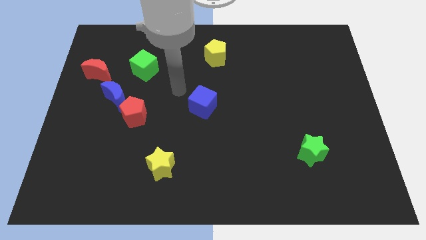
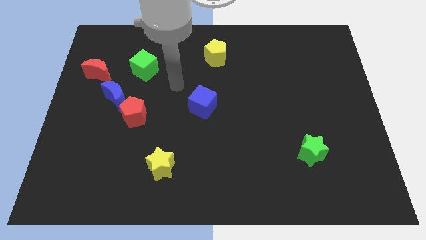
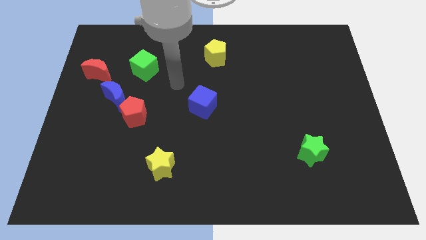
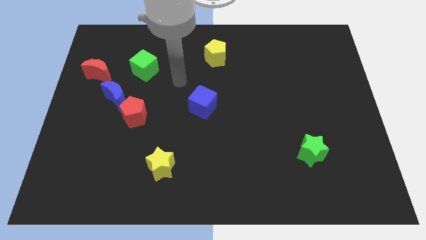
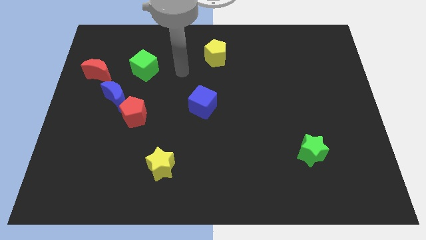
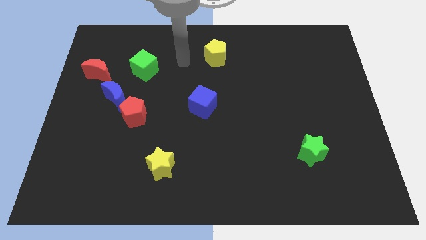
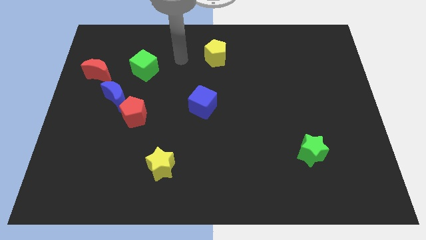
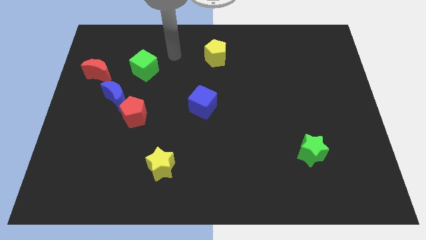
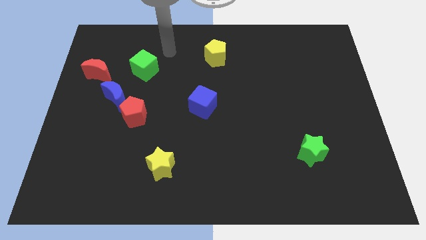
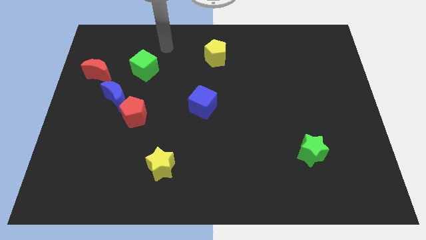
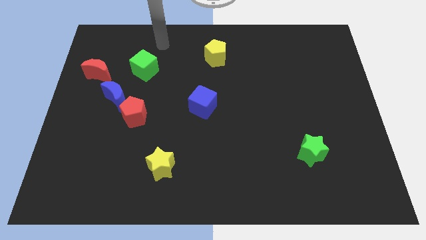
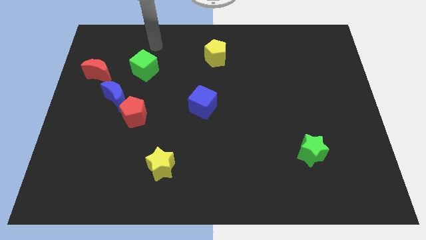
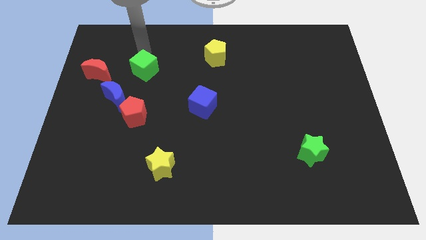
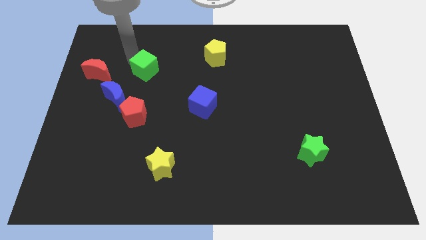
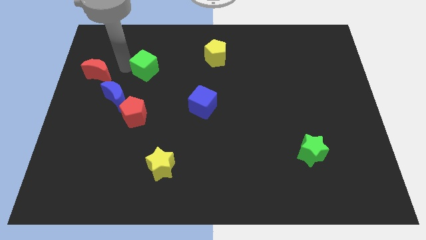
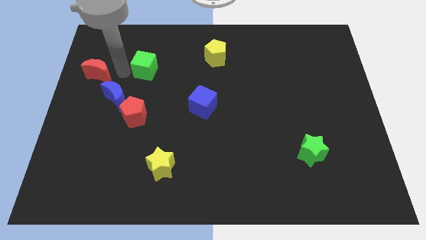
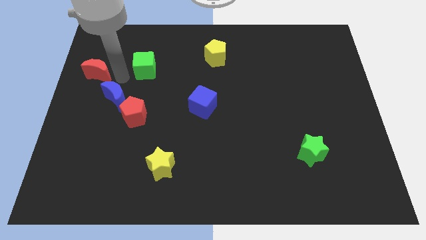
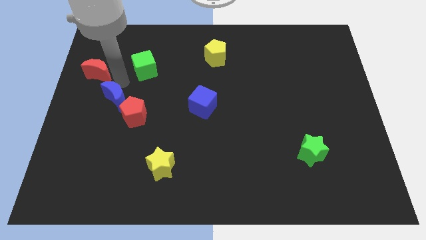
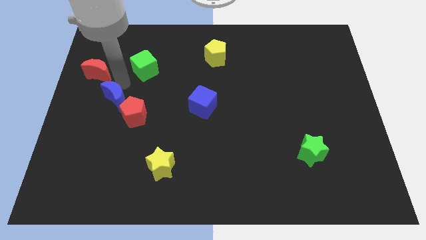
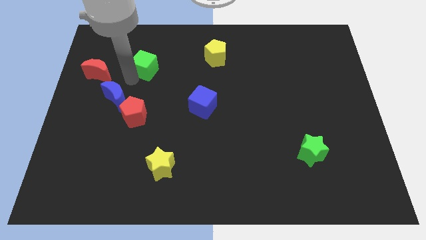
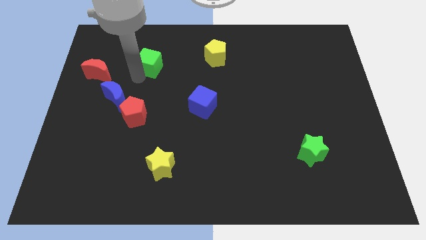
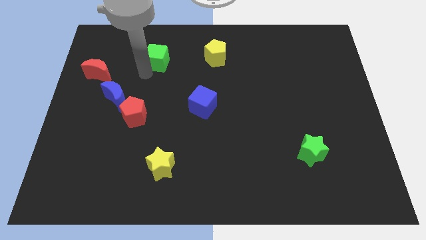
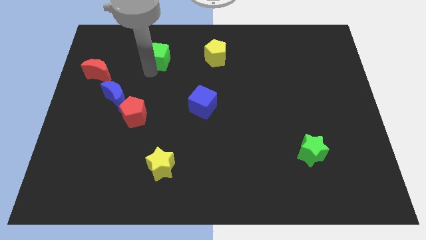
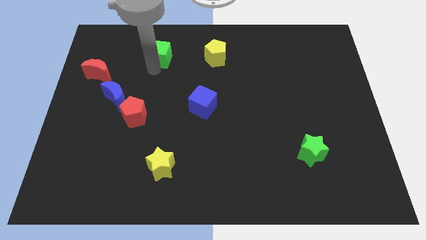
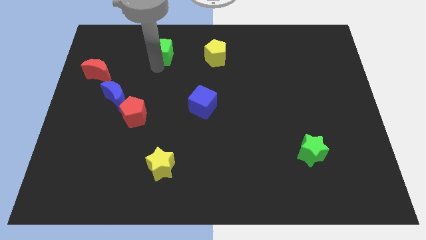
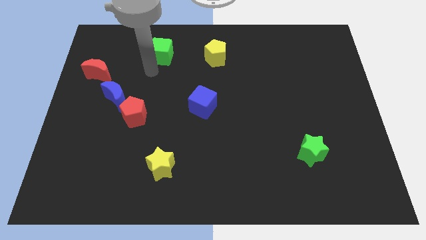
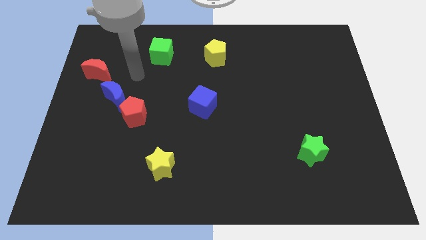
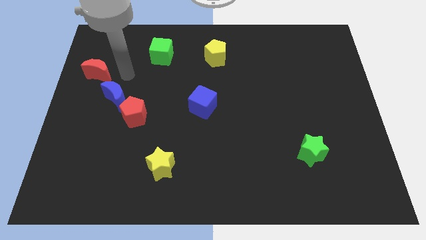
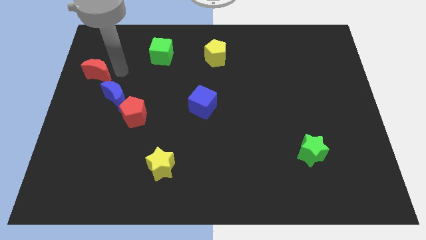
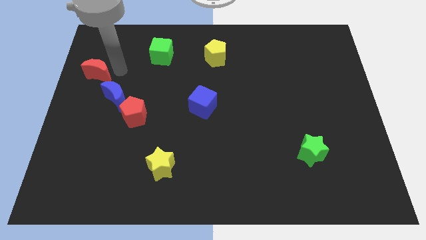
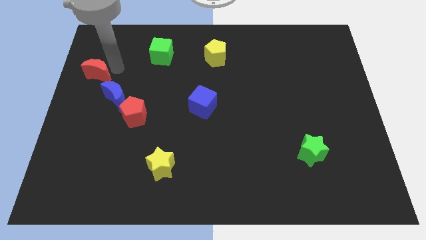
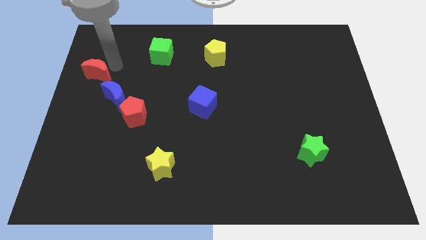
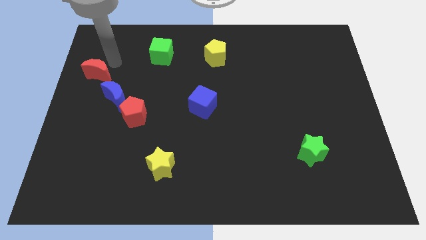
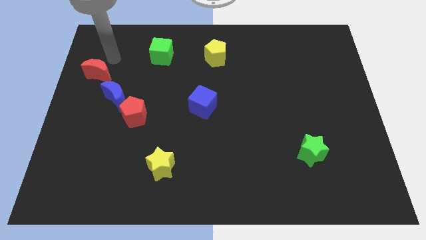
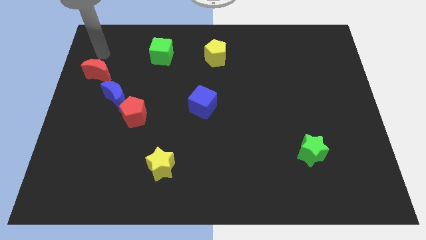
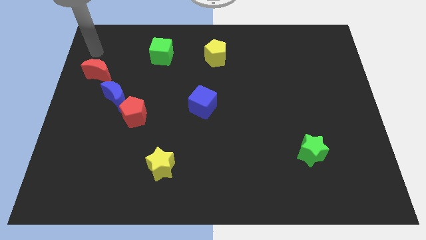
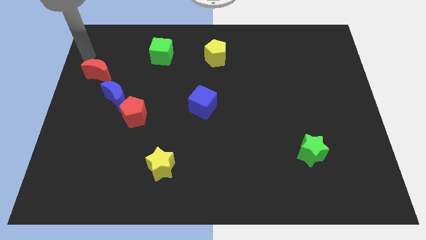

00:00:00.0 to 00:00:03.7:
push the green cube left to the yellow pentagon

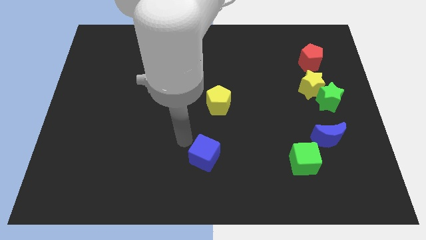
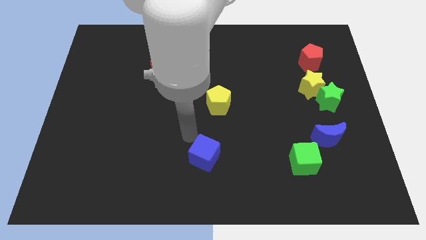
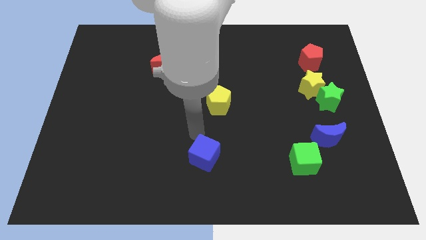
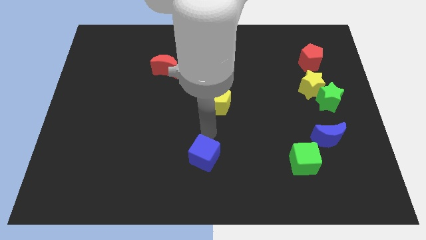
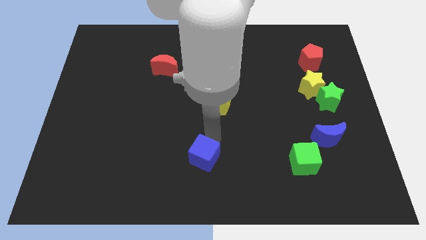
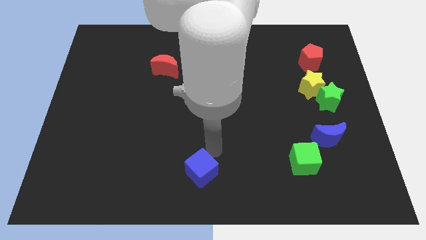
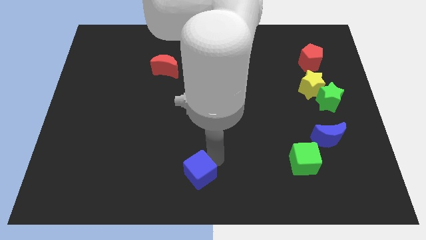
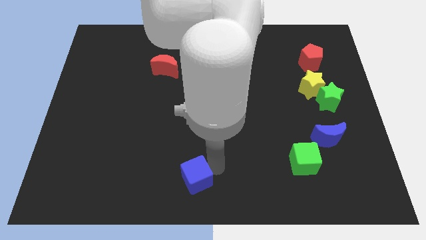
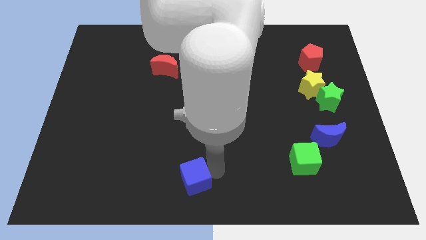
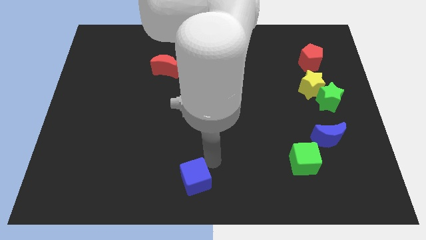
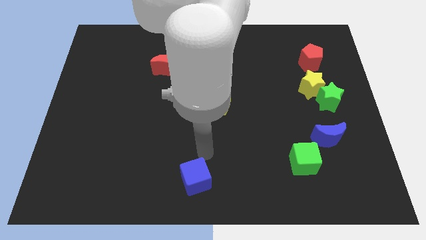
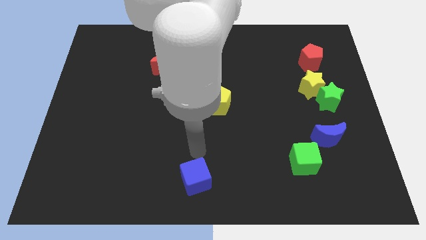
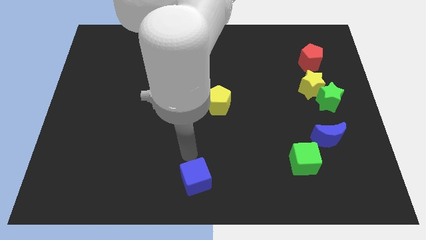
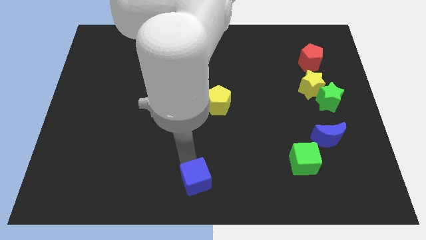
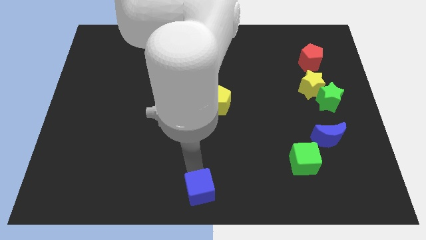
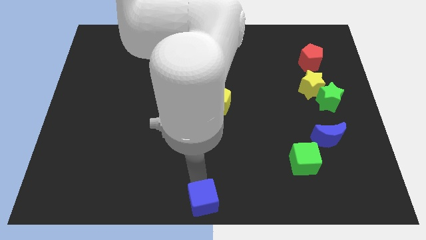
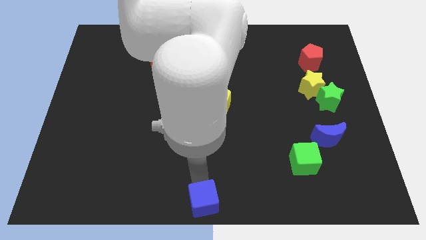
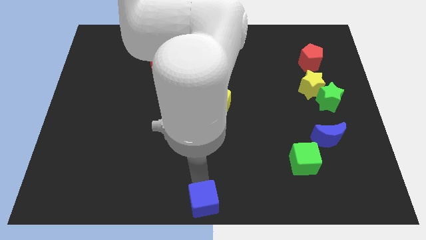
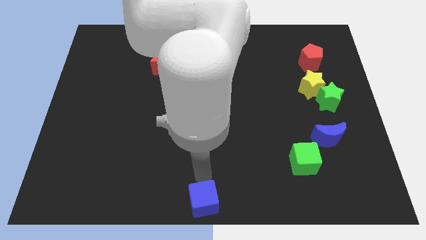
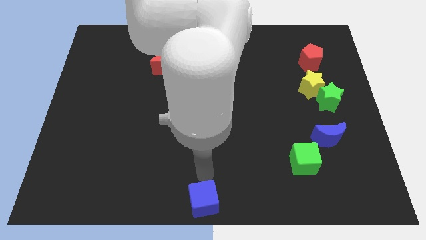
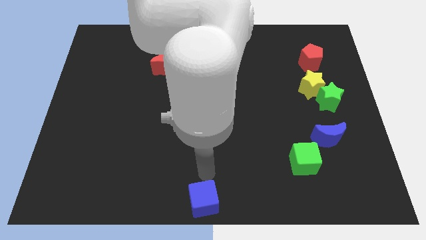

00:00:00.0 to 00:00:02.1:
push the blue cube to the bottom center of the board

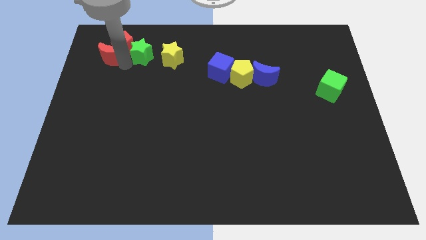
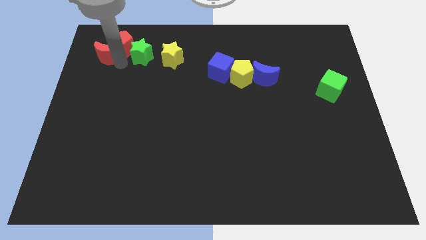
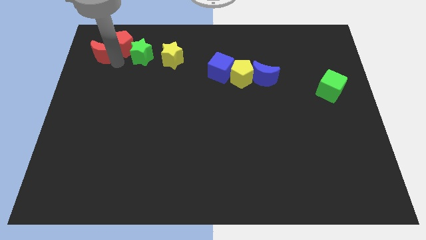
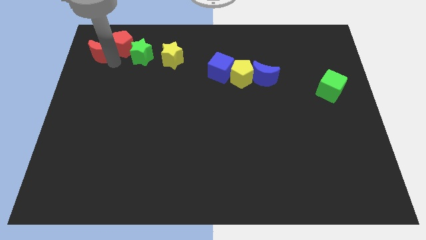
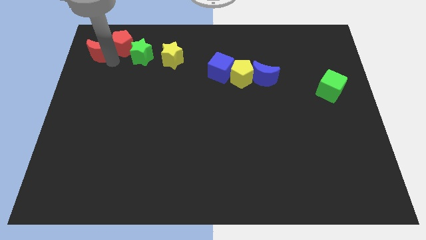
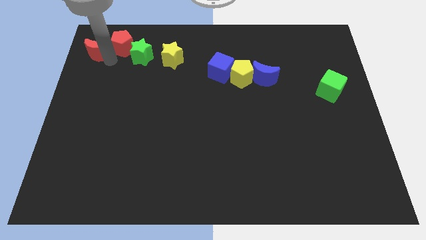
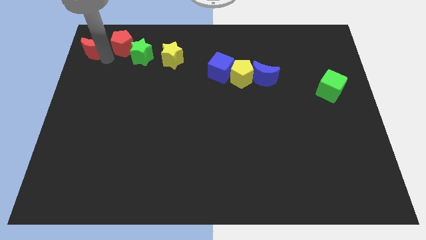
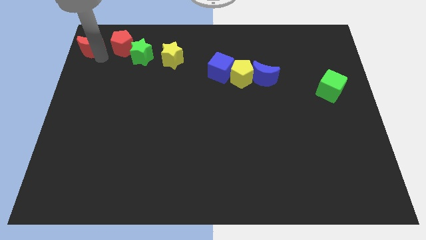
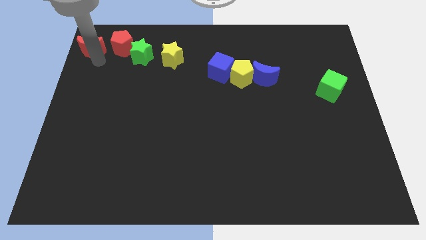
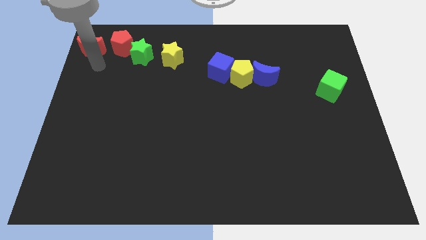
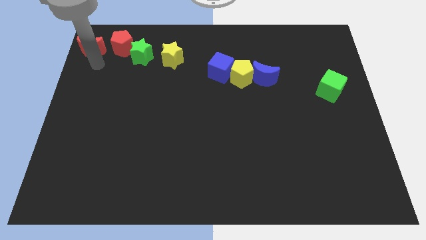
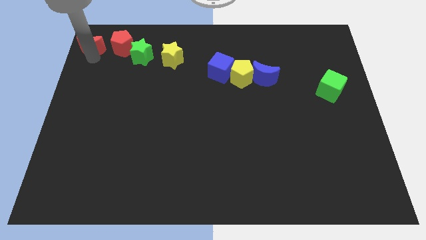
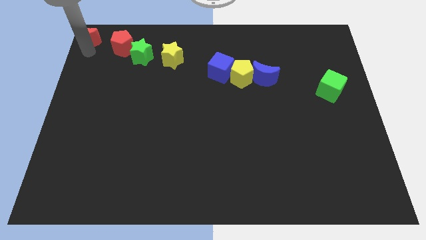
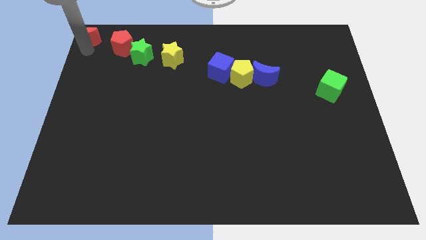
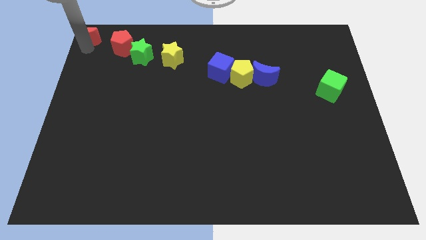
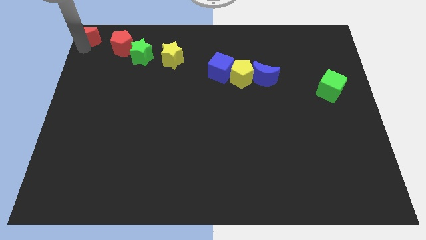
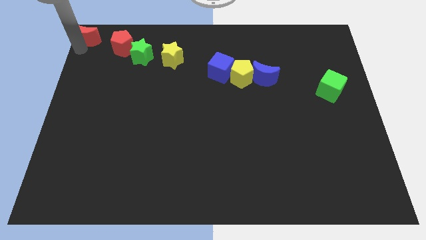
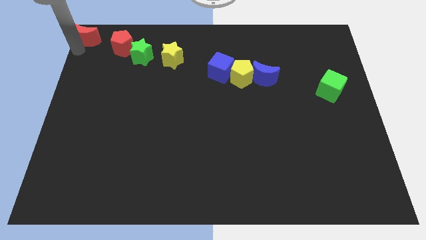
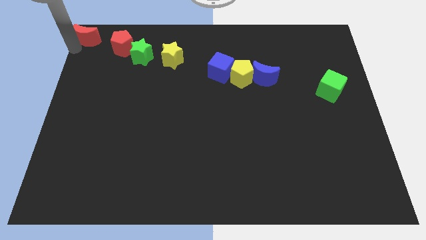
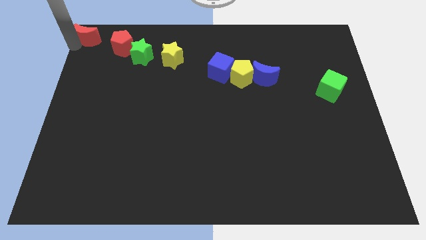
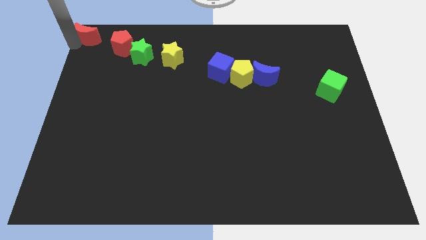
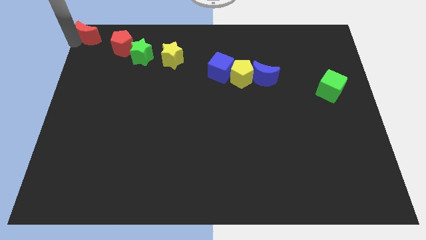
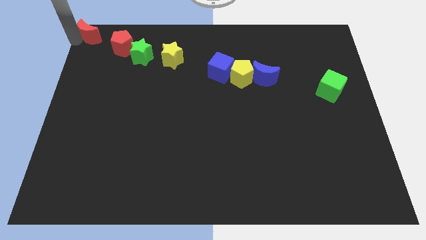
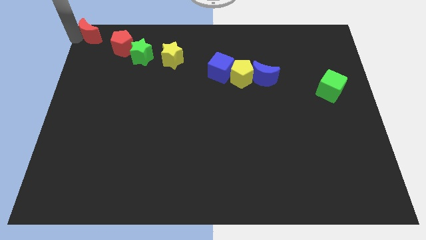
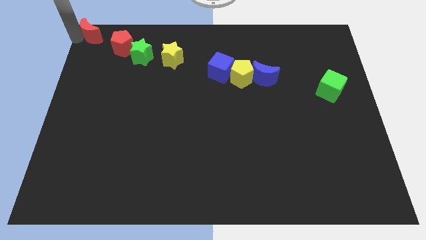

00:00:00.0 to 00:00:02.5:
push the red moon to the top left of the board

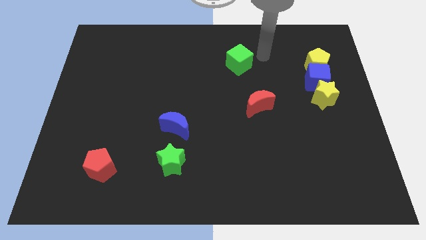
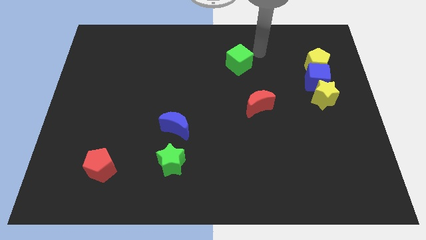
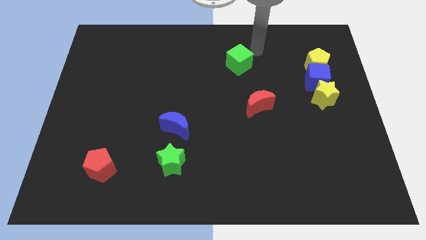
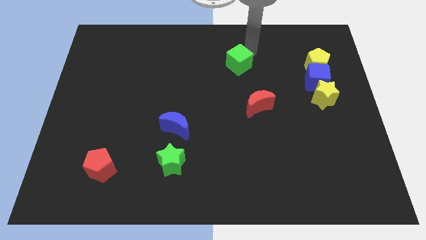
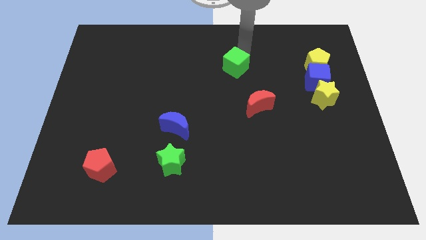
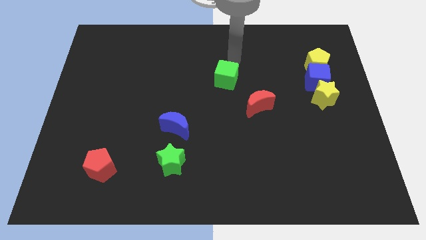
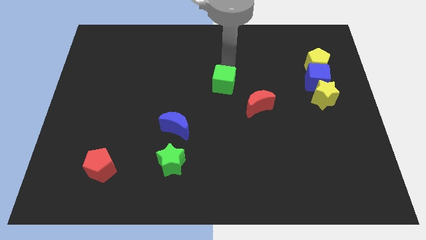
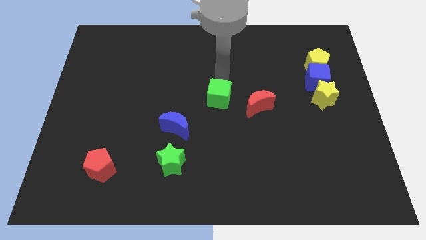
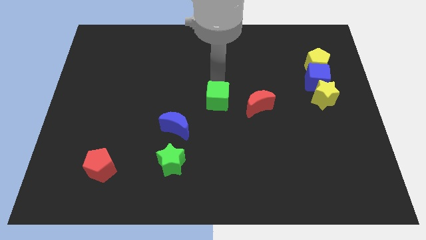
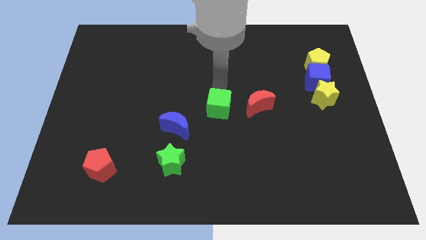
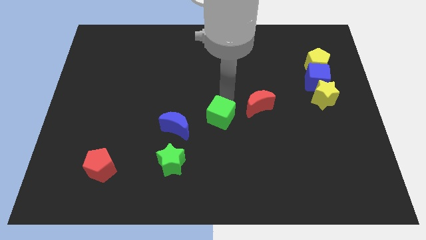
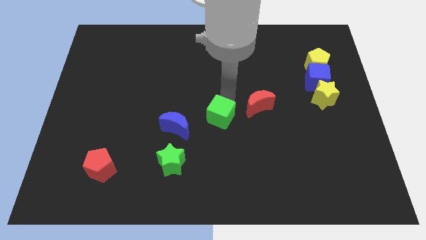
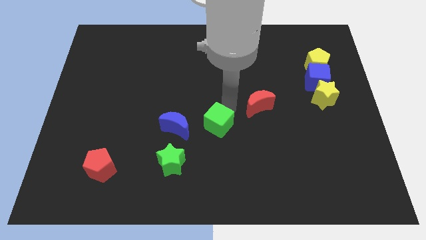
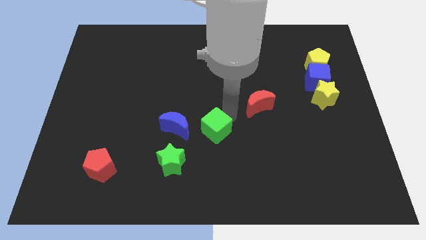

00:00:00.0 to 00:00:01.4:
place the green cube to the right of the blue crescent
